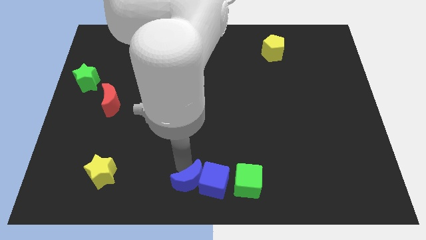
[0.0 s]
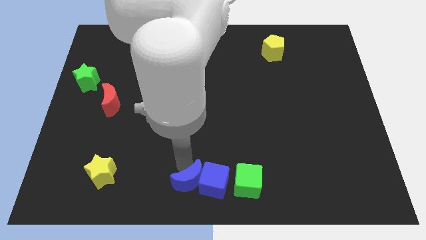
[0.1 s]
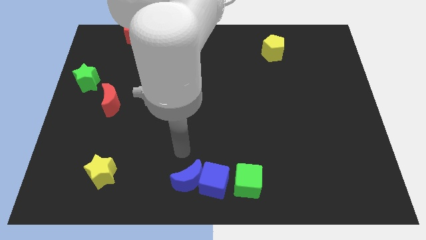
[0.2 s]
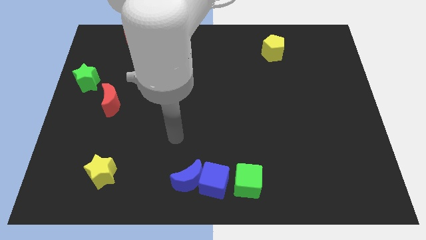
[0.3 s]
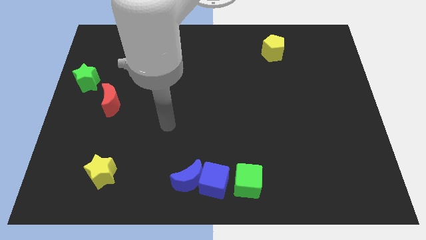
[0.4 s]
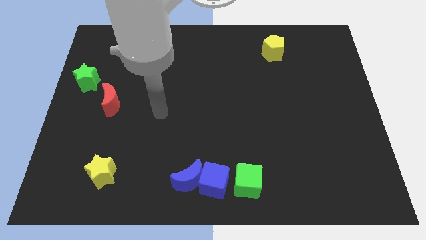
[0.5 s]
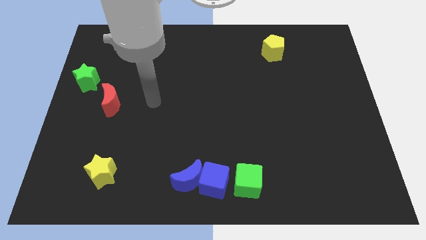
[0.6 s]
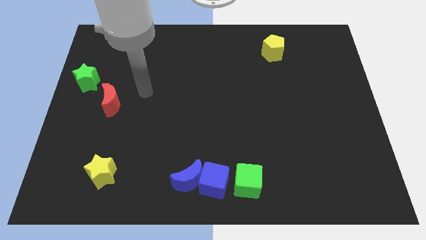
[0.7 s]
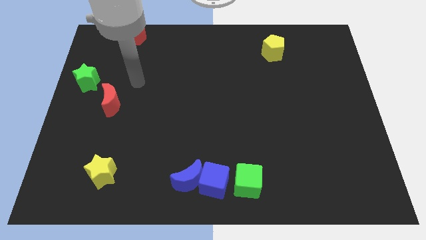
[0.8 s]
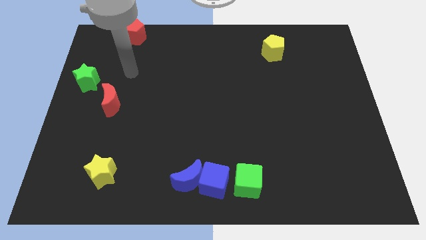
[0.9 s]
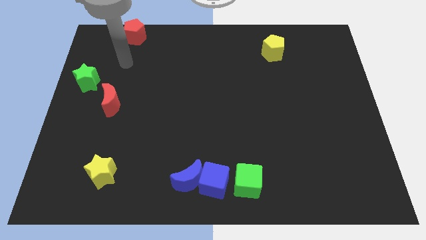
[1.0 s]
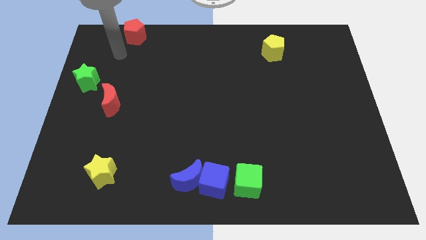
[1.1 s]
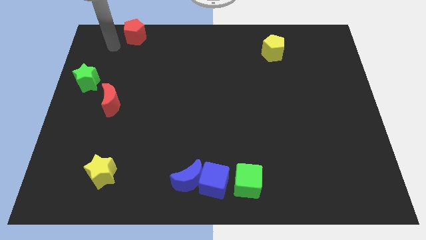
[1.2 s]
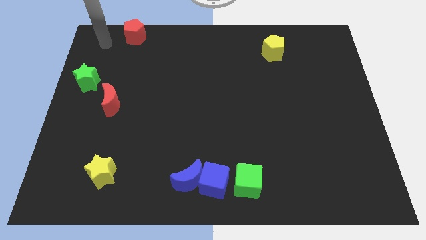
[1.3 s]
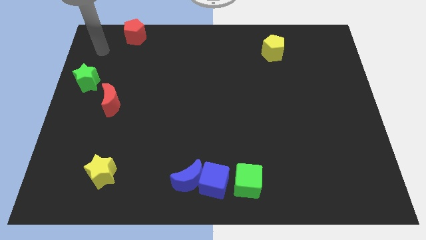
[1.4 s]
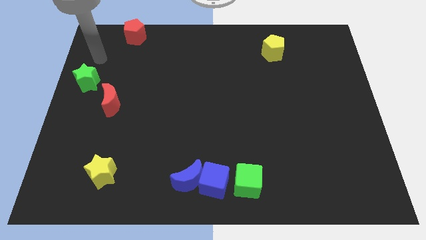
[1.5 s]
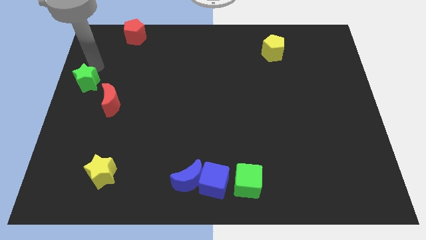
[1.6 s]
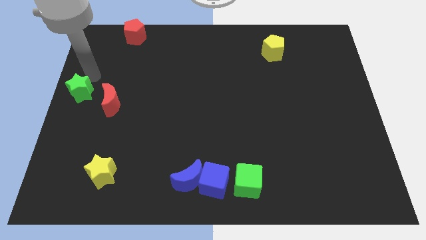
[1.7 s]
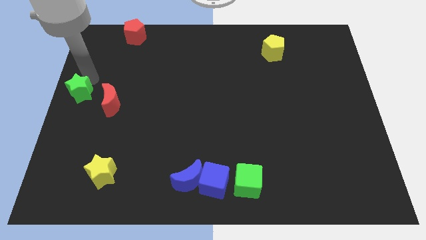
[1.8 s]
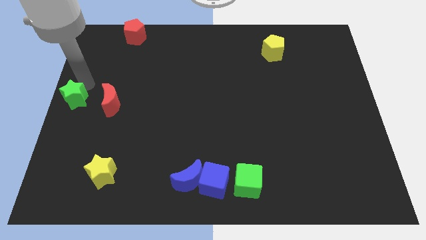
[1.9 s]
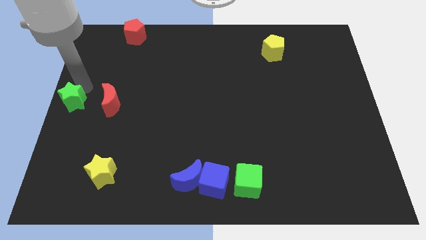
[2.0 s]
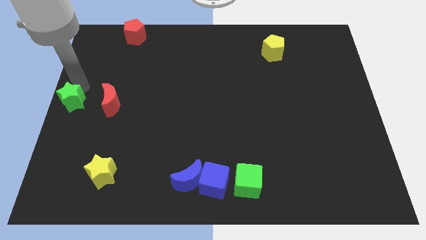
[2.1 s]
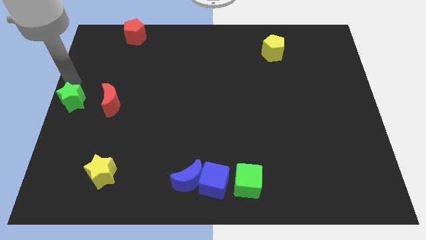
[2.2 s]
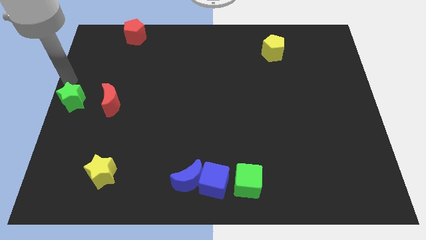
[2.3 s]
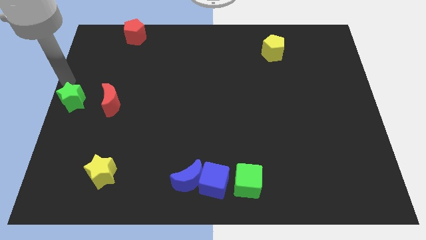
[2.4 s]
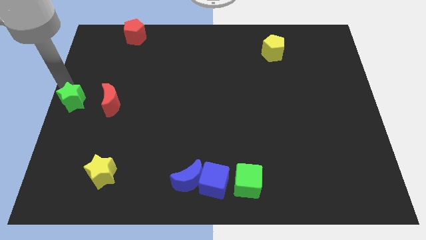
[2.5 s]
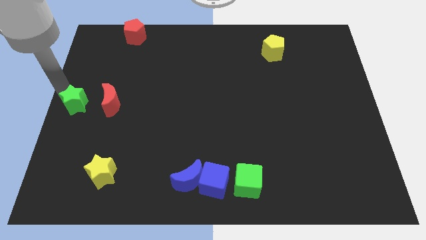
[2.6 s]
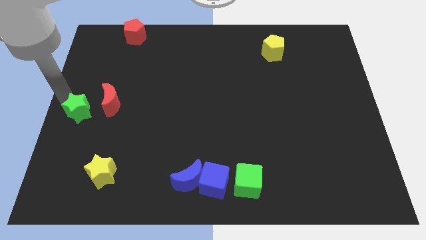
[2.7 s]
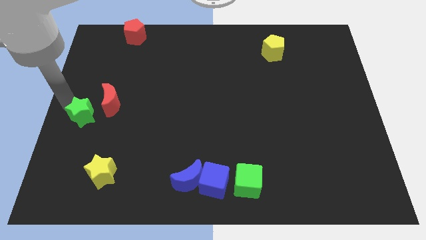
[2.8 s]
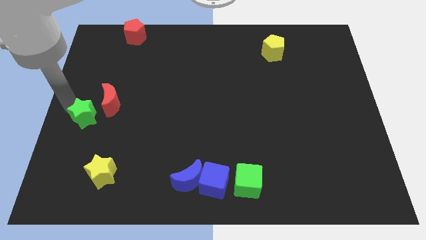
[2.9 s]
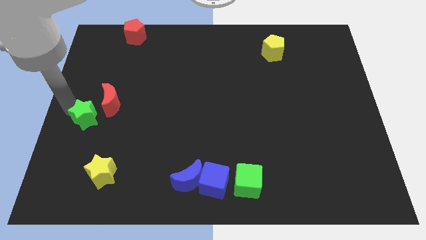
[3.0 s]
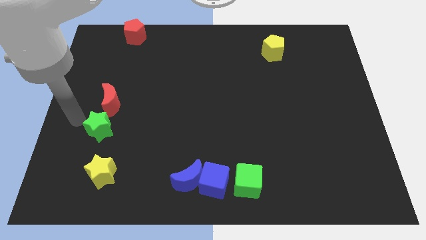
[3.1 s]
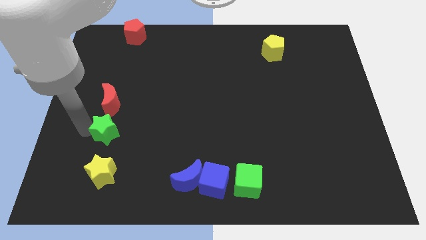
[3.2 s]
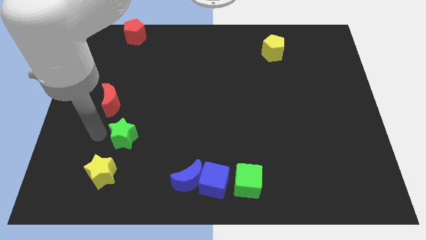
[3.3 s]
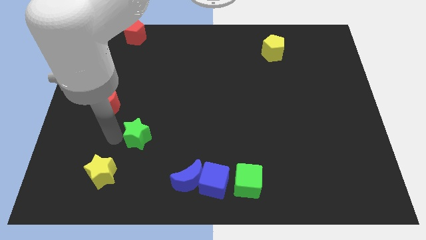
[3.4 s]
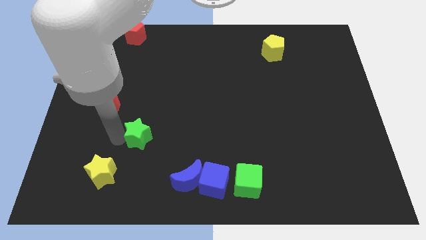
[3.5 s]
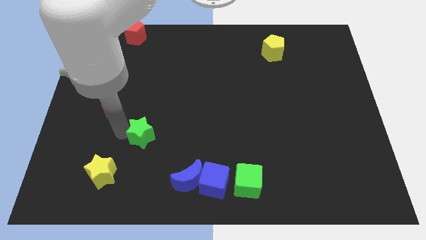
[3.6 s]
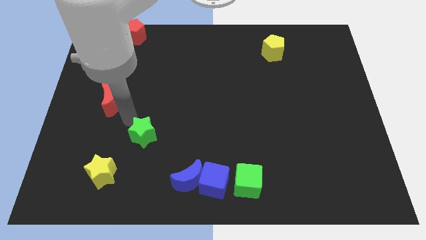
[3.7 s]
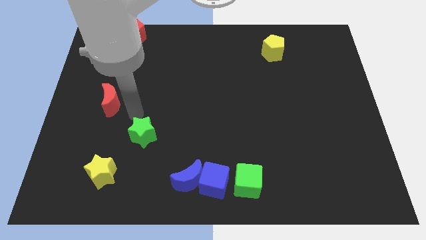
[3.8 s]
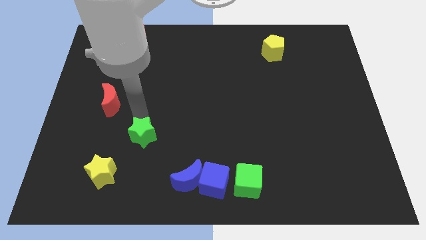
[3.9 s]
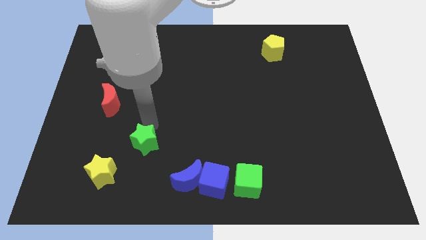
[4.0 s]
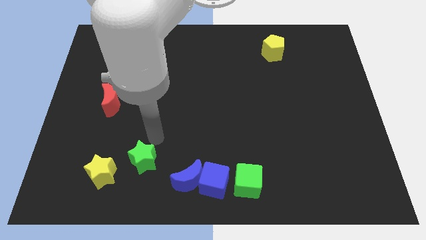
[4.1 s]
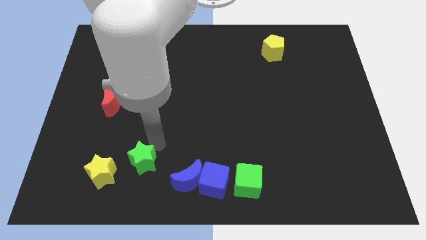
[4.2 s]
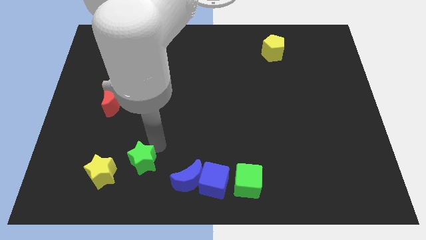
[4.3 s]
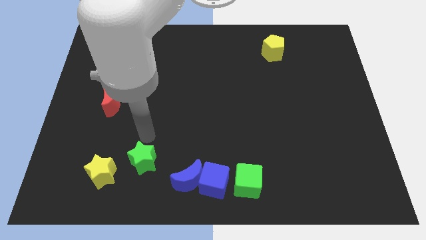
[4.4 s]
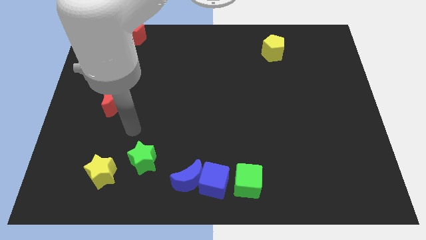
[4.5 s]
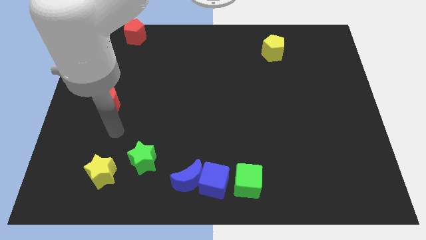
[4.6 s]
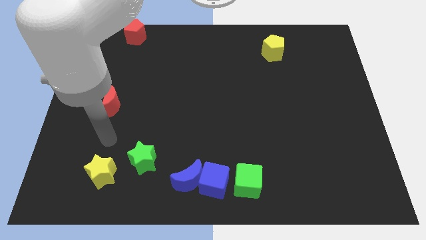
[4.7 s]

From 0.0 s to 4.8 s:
drag the green star diagonally bottom right to the red moon

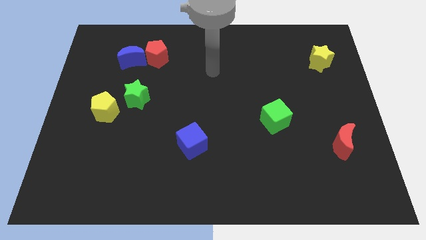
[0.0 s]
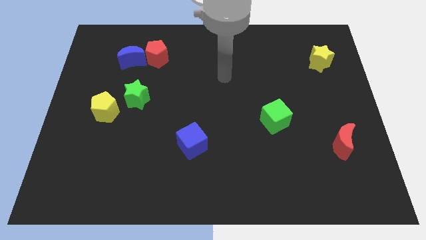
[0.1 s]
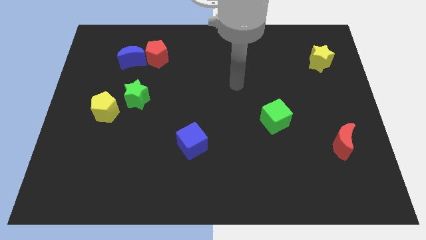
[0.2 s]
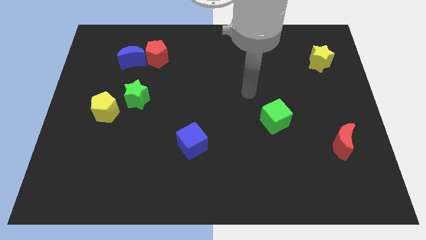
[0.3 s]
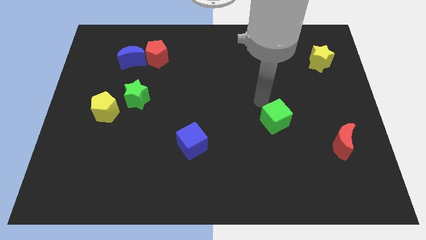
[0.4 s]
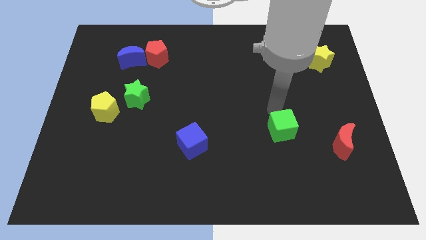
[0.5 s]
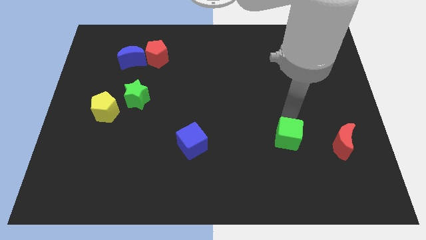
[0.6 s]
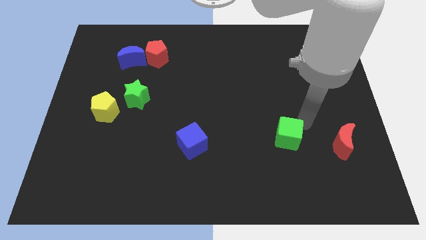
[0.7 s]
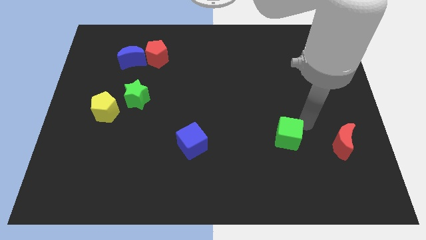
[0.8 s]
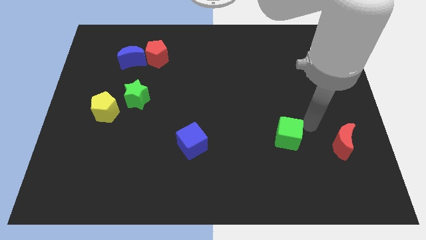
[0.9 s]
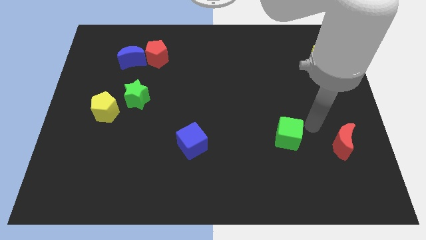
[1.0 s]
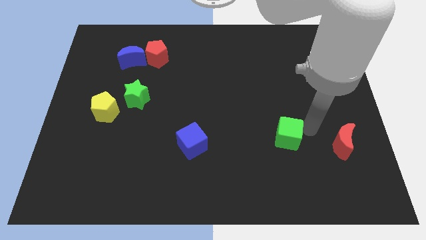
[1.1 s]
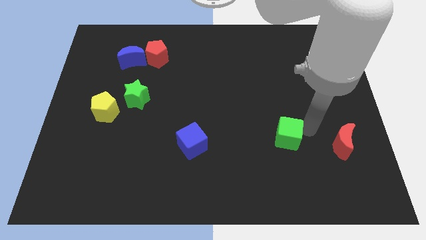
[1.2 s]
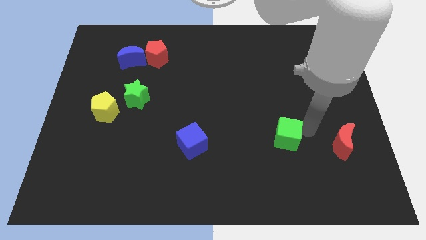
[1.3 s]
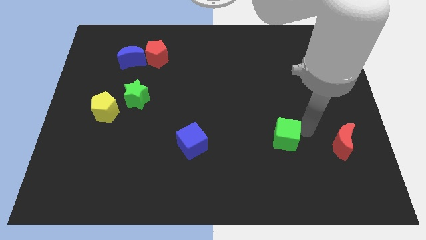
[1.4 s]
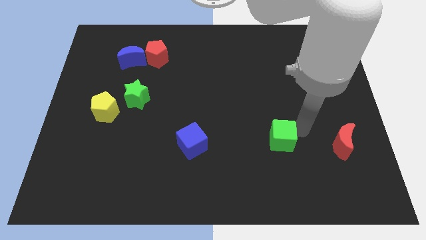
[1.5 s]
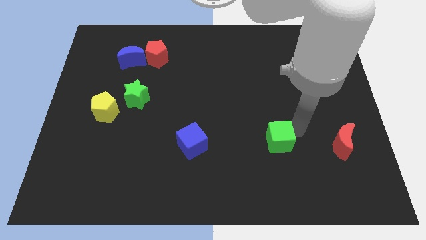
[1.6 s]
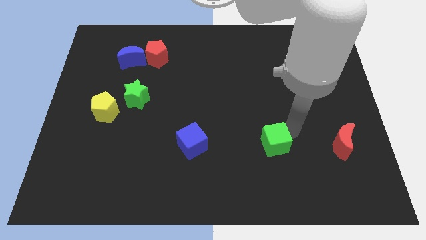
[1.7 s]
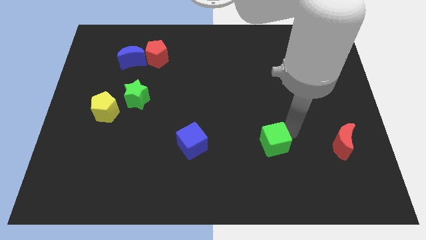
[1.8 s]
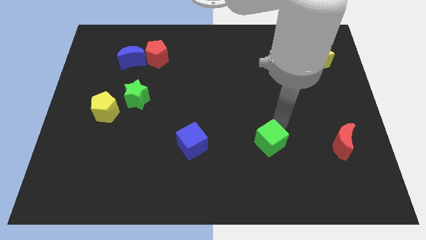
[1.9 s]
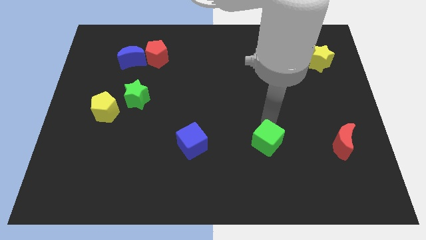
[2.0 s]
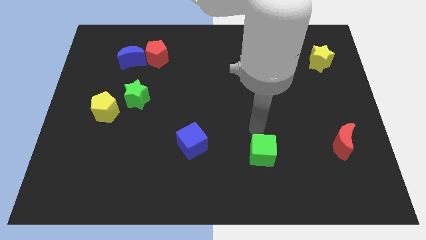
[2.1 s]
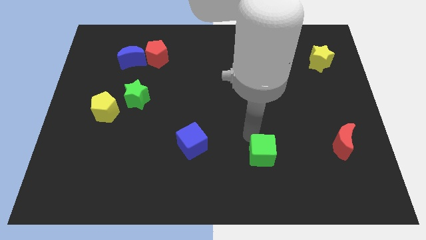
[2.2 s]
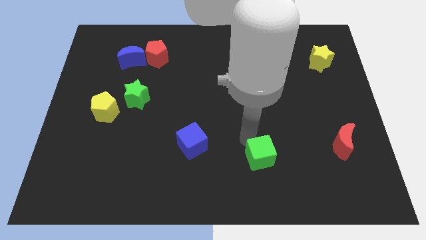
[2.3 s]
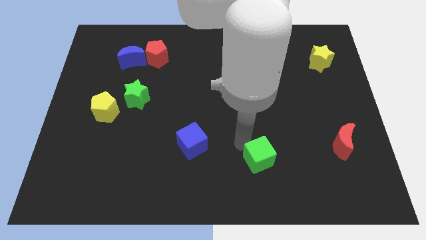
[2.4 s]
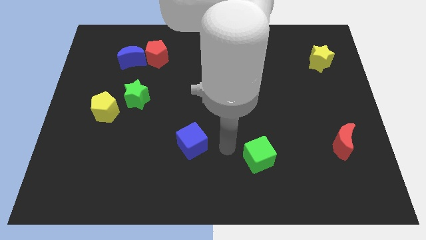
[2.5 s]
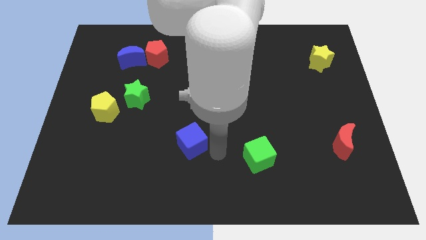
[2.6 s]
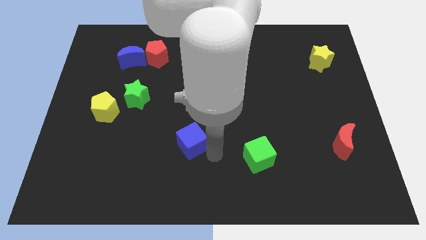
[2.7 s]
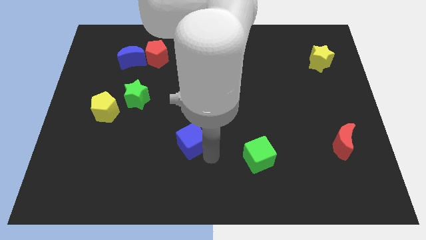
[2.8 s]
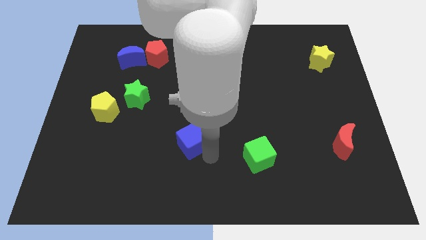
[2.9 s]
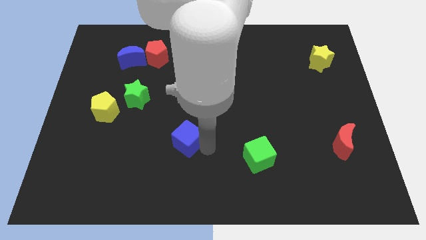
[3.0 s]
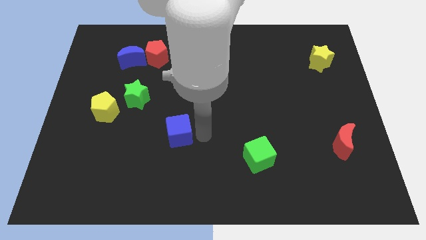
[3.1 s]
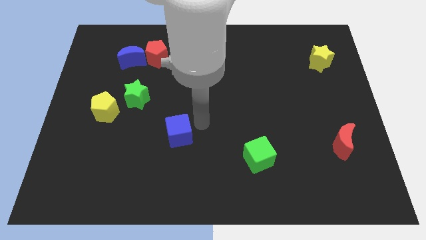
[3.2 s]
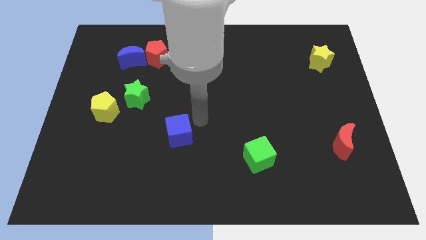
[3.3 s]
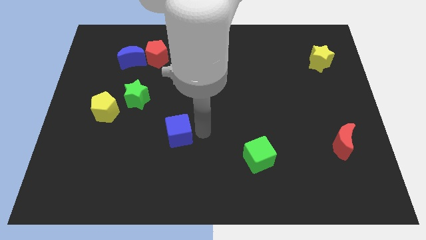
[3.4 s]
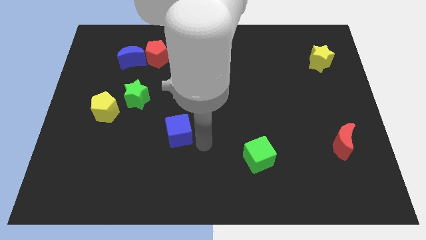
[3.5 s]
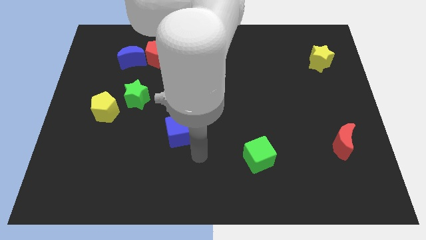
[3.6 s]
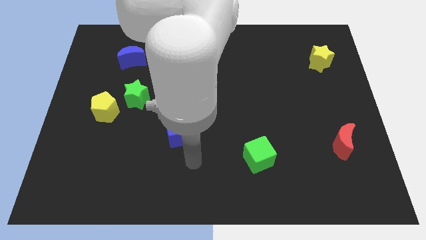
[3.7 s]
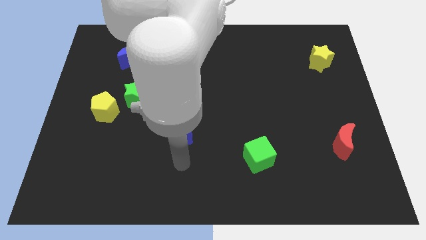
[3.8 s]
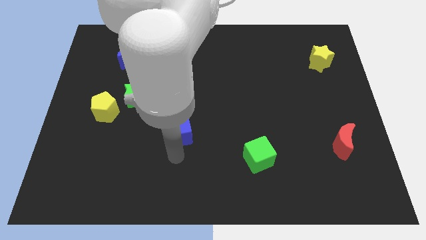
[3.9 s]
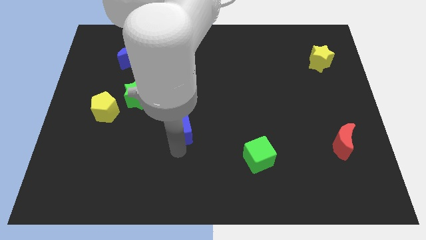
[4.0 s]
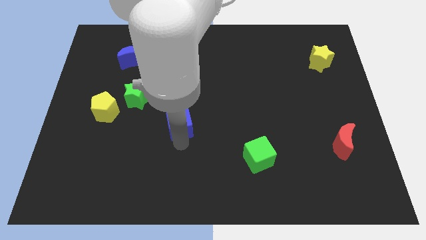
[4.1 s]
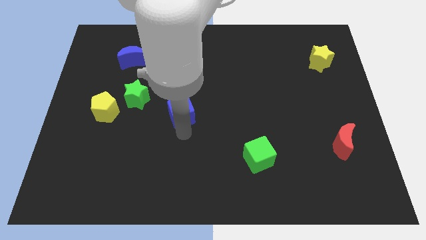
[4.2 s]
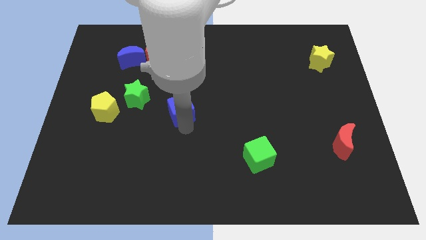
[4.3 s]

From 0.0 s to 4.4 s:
place the blue cube to the right of the yellow pentagon
